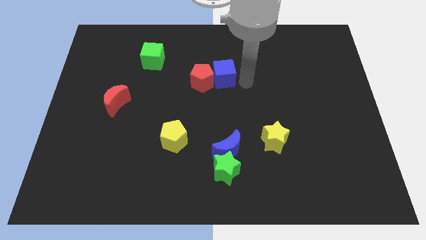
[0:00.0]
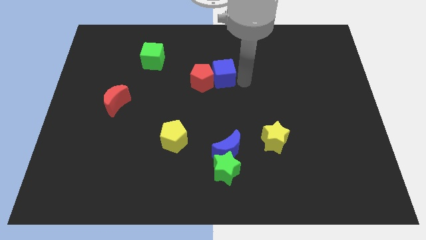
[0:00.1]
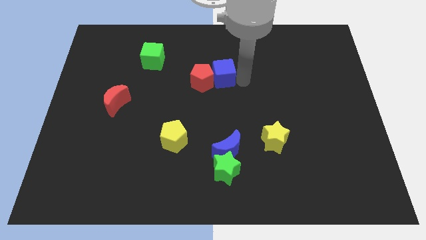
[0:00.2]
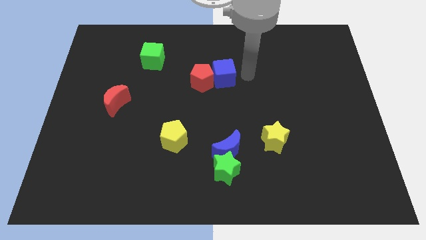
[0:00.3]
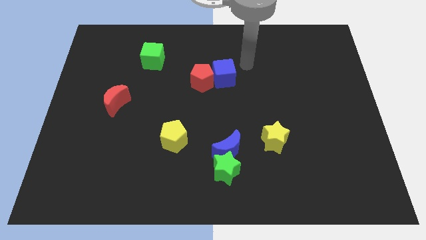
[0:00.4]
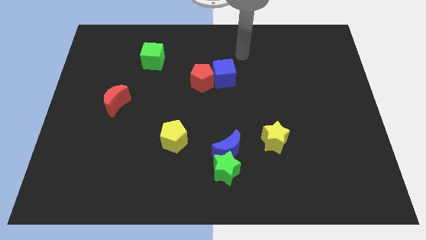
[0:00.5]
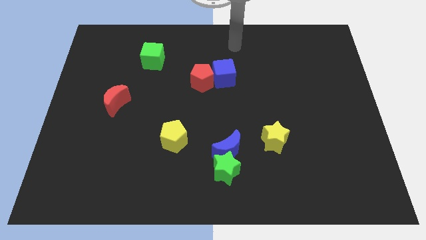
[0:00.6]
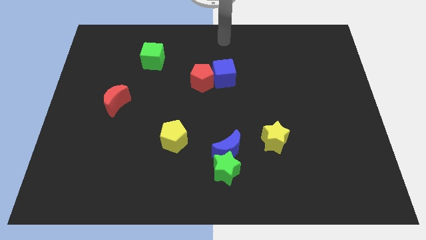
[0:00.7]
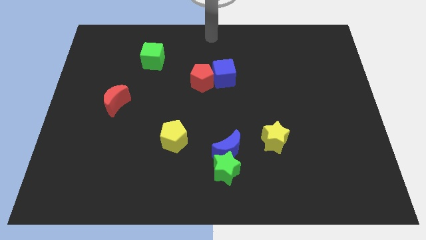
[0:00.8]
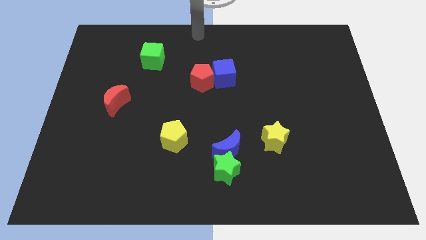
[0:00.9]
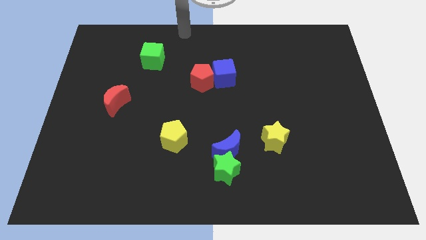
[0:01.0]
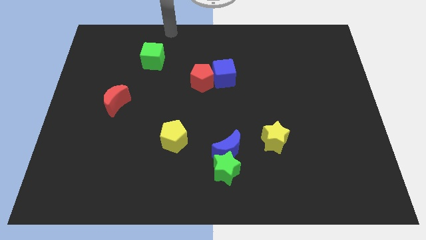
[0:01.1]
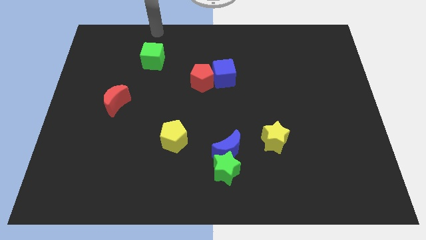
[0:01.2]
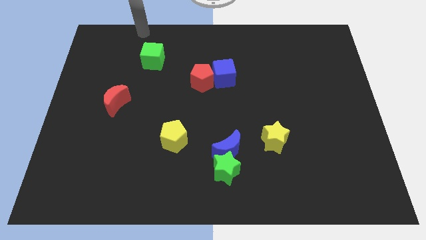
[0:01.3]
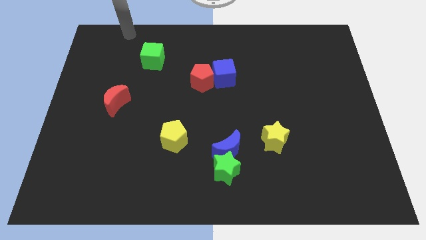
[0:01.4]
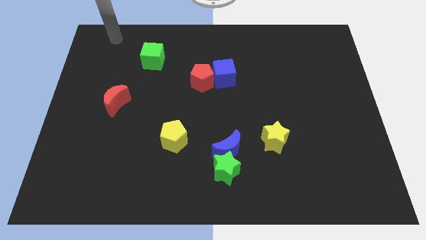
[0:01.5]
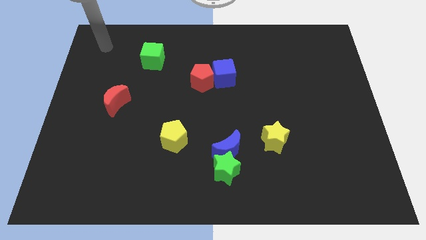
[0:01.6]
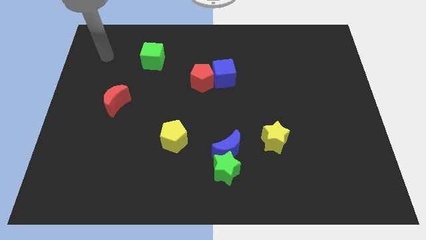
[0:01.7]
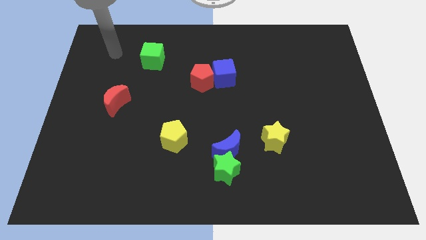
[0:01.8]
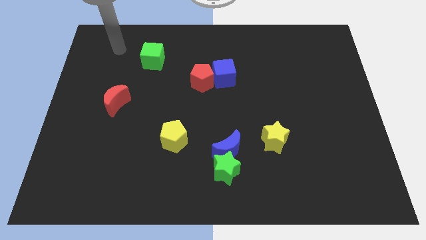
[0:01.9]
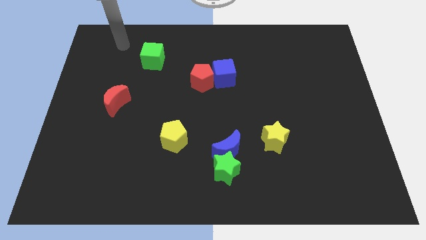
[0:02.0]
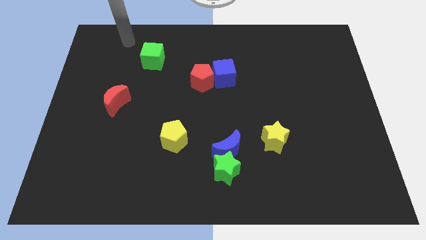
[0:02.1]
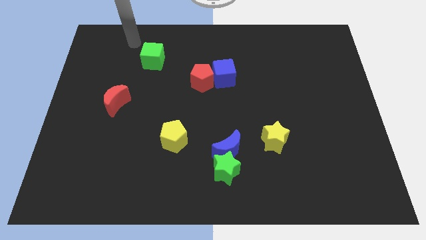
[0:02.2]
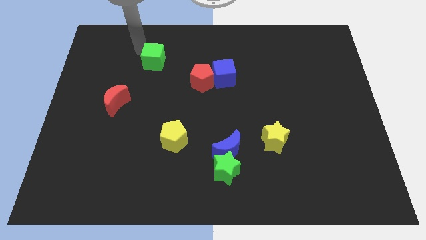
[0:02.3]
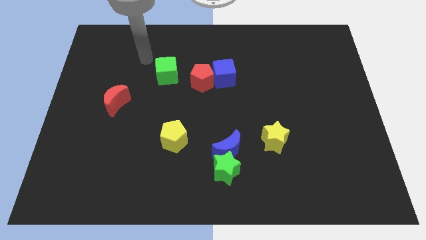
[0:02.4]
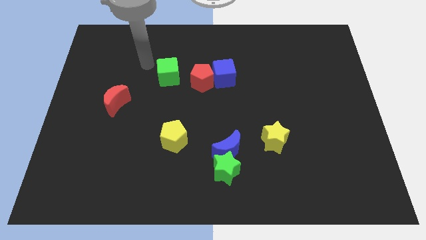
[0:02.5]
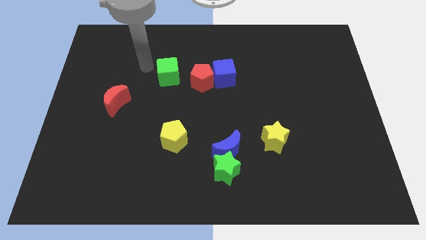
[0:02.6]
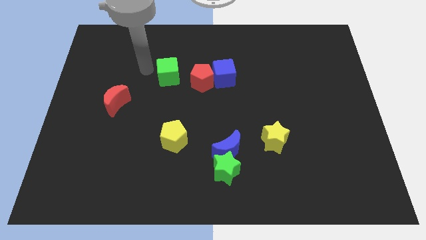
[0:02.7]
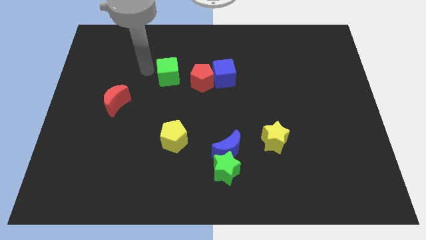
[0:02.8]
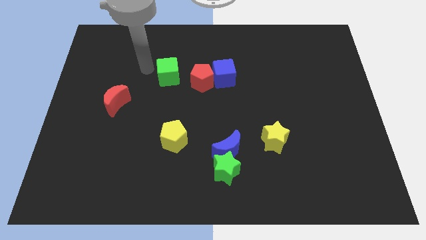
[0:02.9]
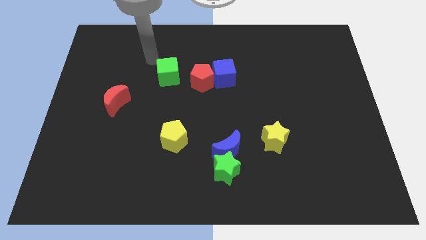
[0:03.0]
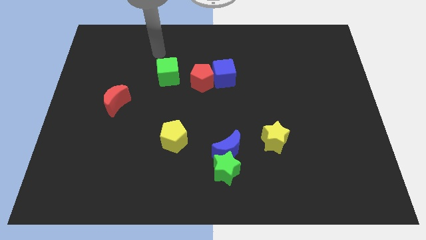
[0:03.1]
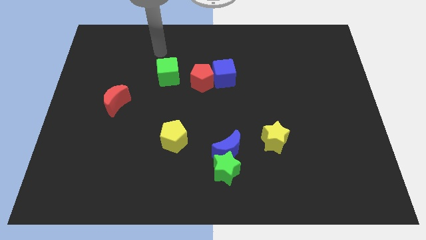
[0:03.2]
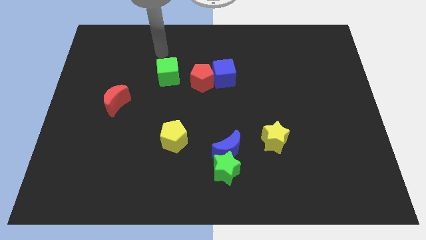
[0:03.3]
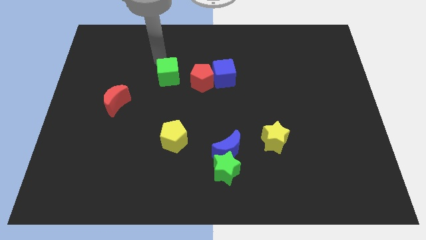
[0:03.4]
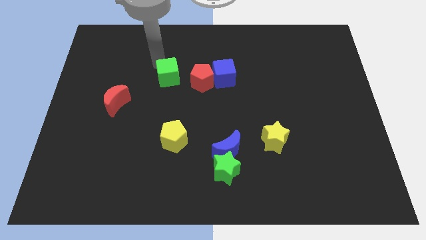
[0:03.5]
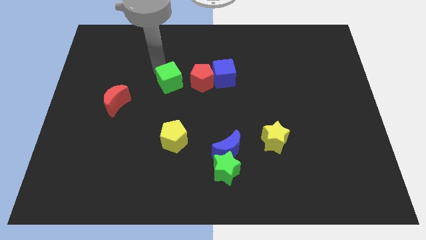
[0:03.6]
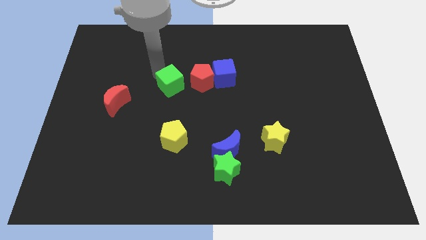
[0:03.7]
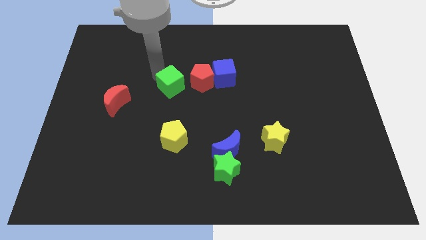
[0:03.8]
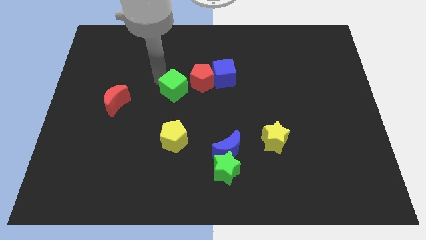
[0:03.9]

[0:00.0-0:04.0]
push the green cube downward

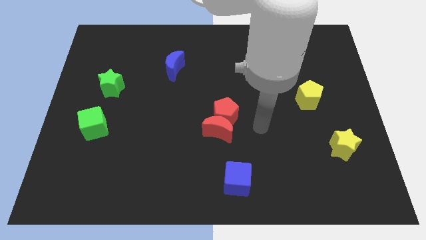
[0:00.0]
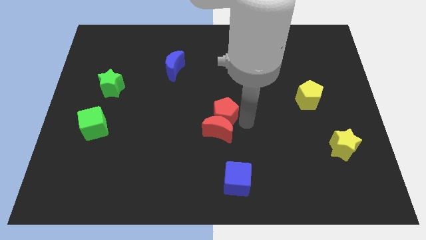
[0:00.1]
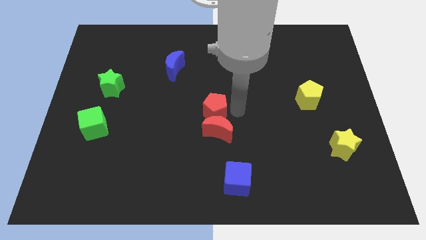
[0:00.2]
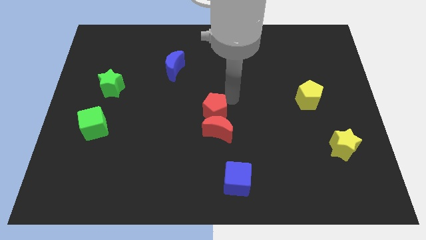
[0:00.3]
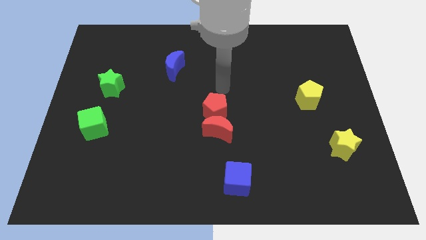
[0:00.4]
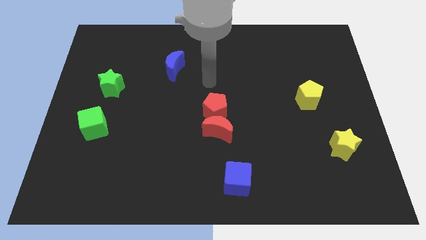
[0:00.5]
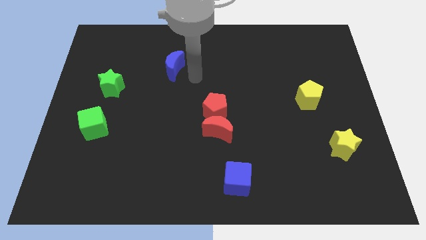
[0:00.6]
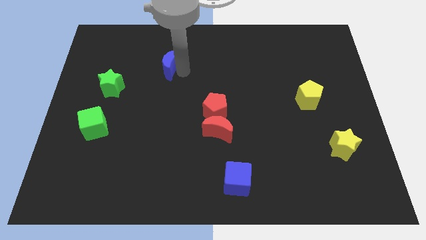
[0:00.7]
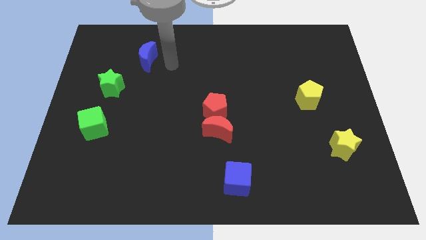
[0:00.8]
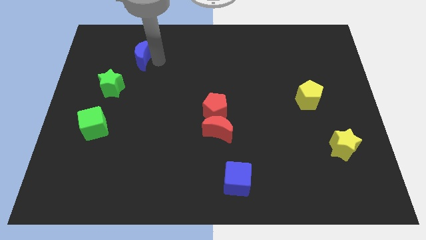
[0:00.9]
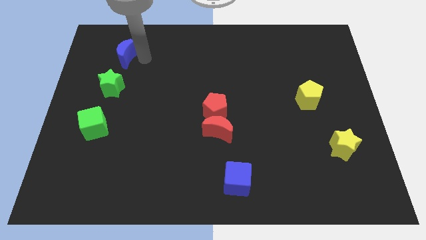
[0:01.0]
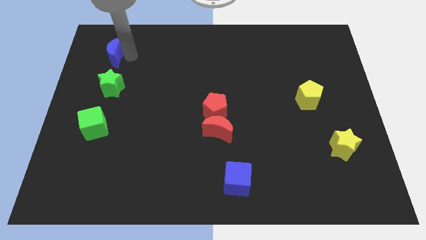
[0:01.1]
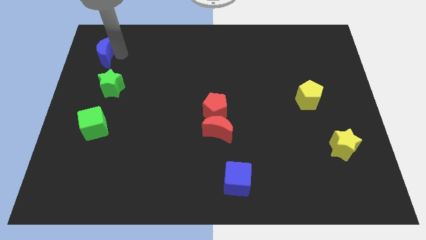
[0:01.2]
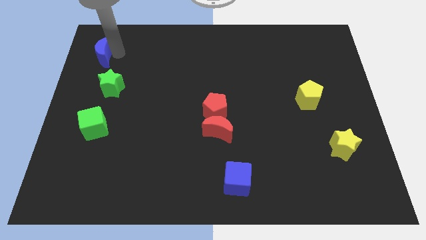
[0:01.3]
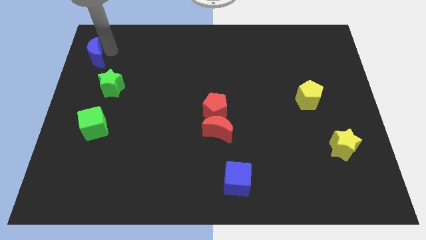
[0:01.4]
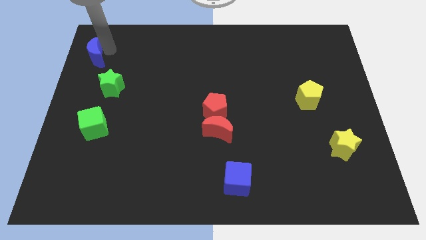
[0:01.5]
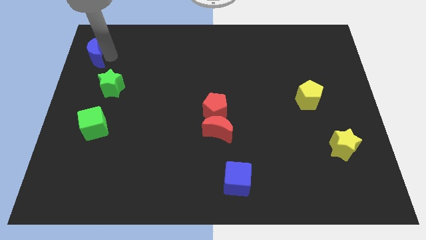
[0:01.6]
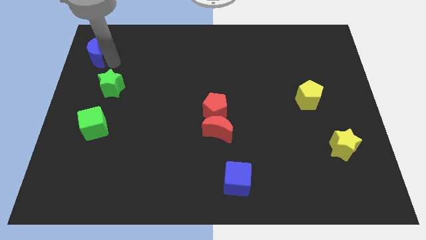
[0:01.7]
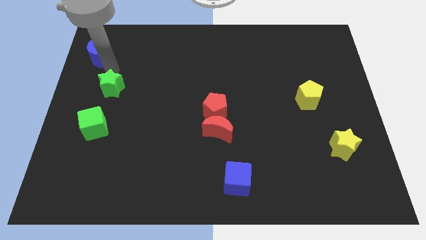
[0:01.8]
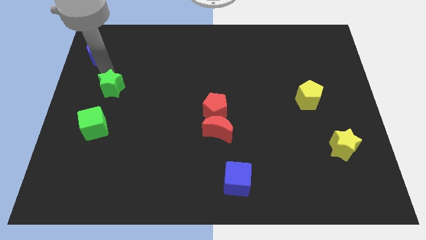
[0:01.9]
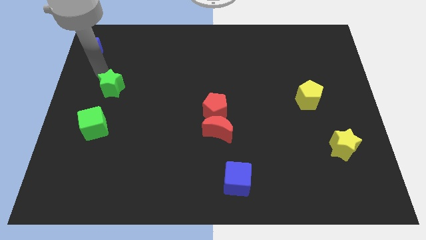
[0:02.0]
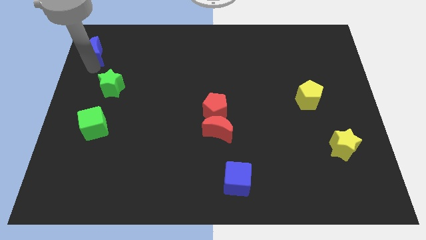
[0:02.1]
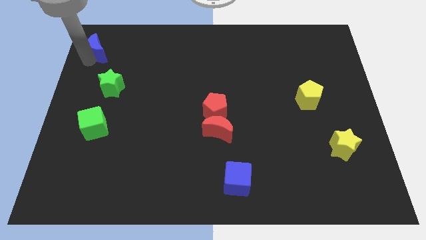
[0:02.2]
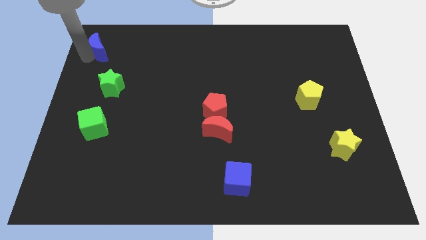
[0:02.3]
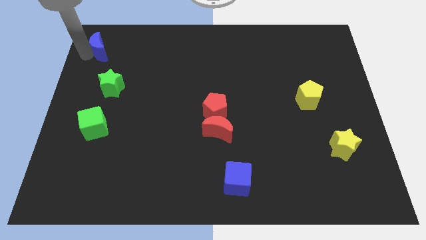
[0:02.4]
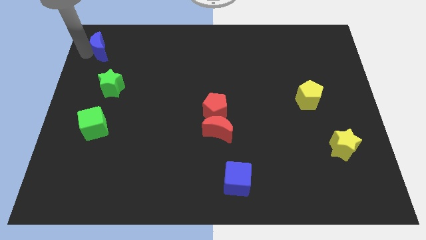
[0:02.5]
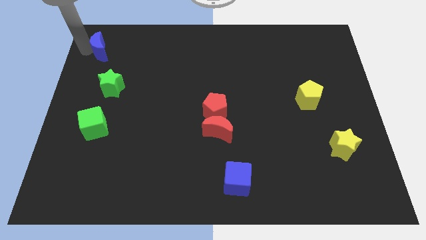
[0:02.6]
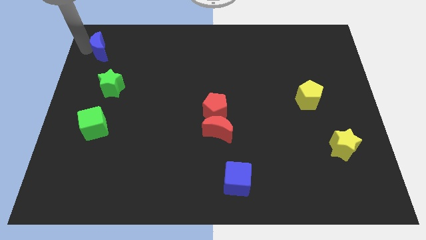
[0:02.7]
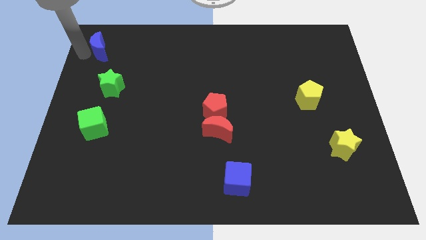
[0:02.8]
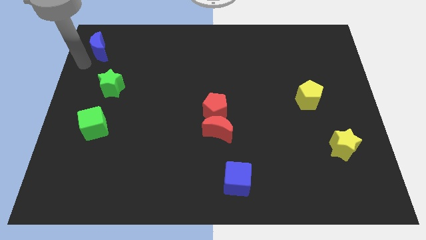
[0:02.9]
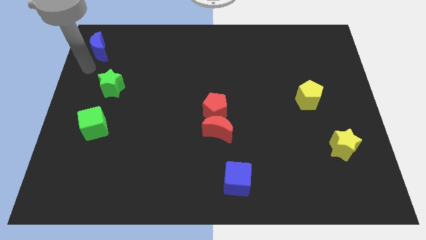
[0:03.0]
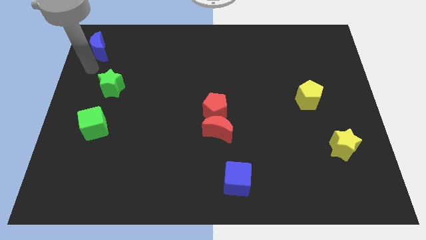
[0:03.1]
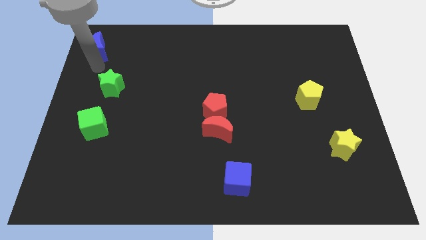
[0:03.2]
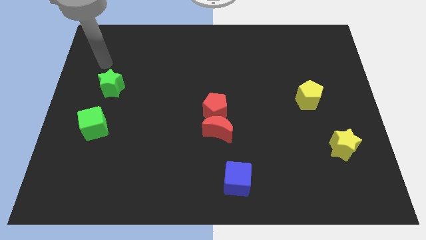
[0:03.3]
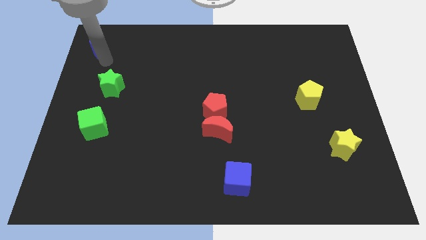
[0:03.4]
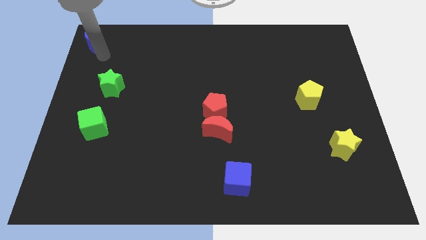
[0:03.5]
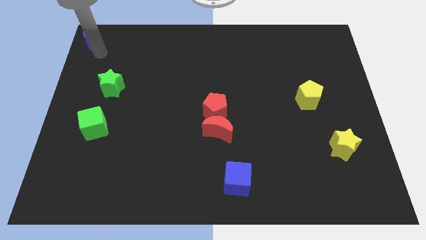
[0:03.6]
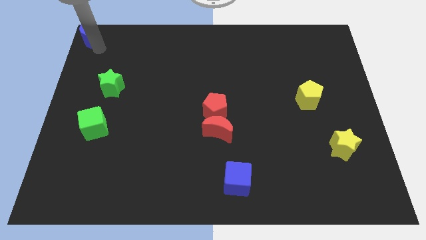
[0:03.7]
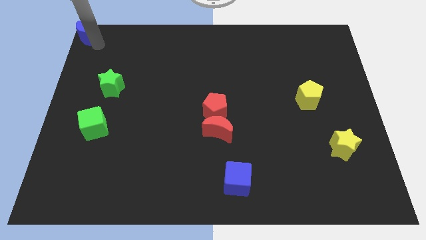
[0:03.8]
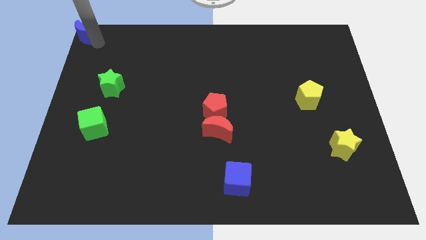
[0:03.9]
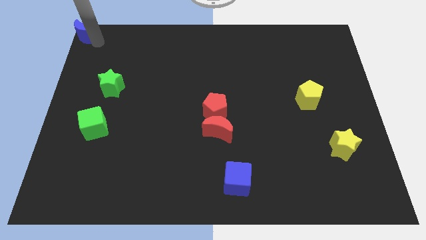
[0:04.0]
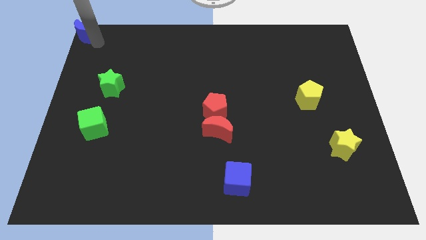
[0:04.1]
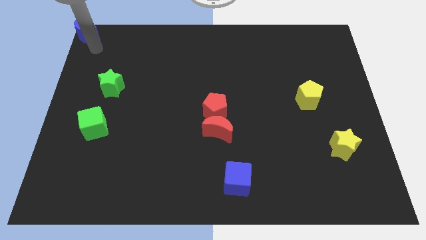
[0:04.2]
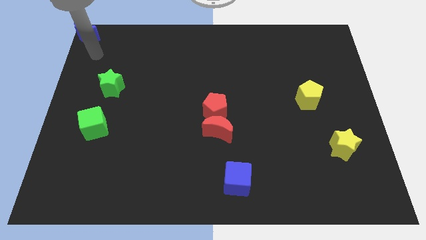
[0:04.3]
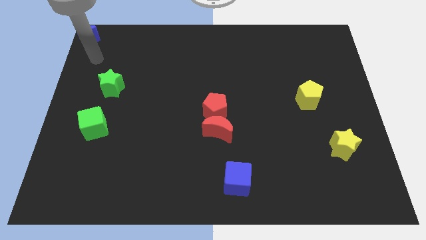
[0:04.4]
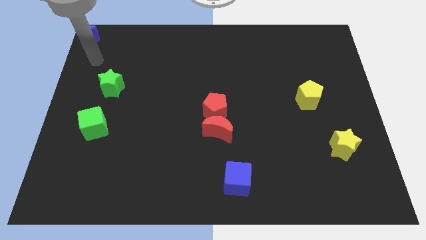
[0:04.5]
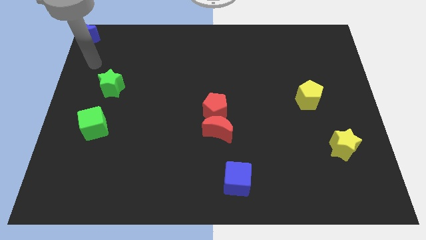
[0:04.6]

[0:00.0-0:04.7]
place the blue moon at the top left corner of the board

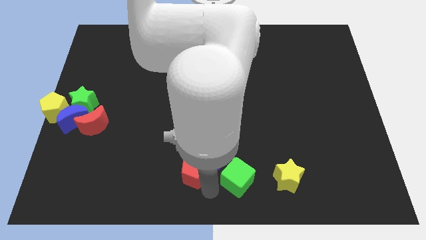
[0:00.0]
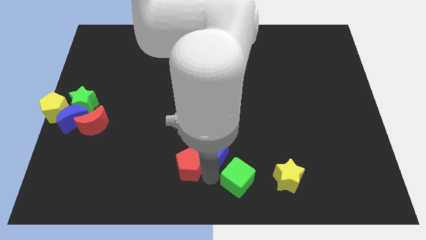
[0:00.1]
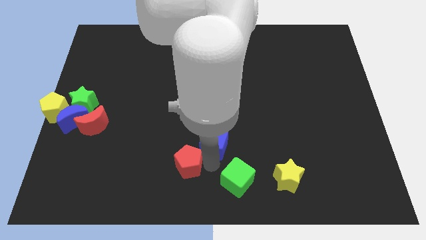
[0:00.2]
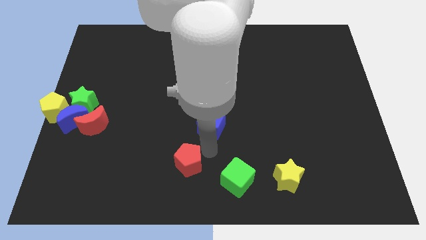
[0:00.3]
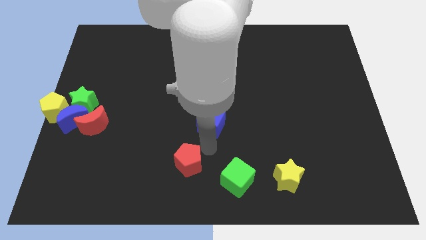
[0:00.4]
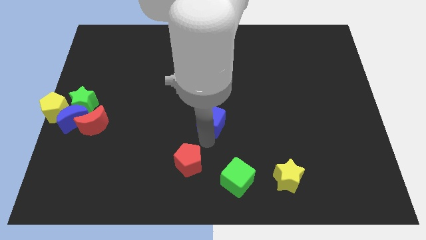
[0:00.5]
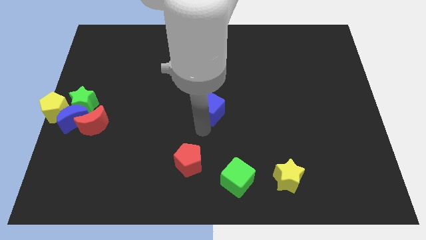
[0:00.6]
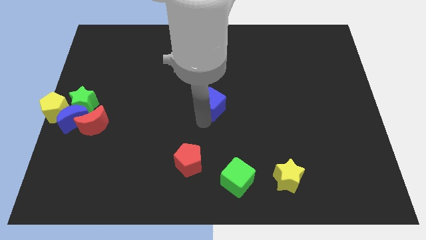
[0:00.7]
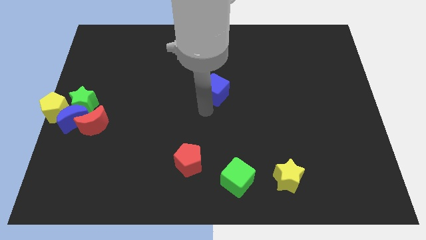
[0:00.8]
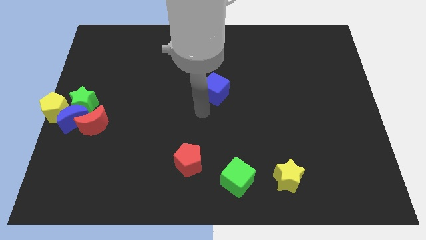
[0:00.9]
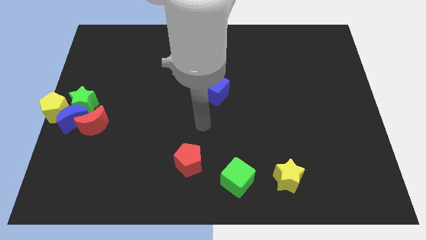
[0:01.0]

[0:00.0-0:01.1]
move the blue cube towards the center of the board
